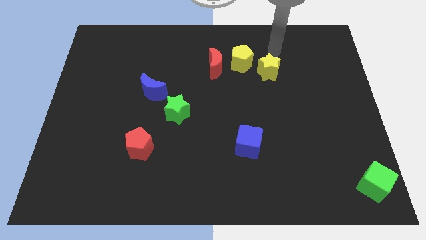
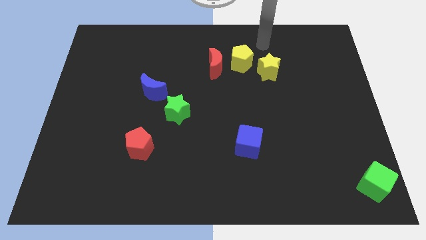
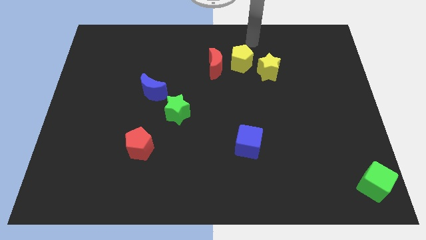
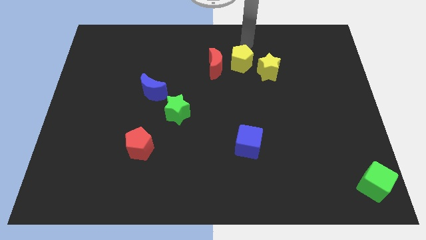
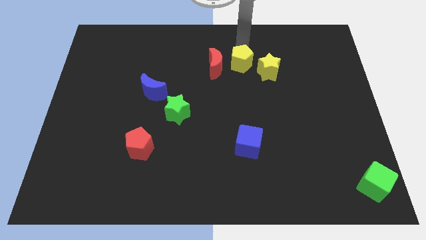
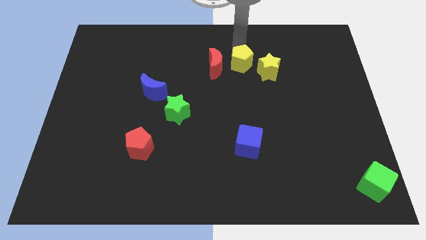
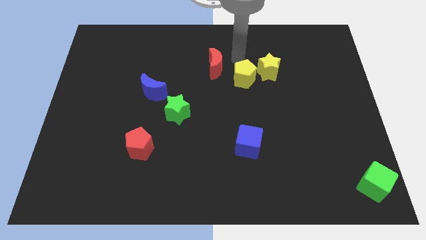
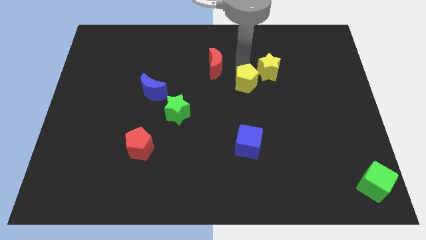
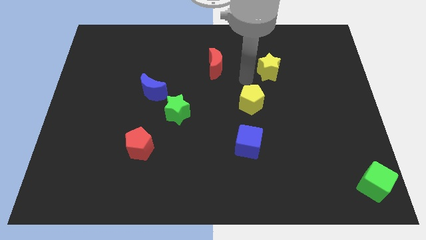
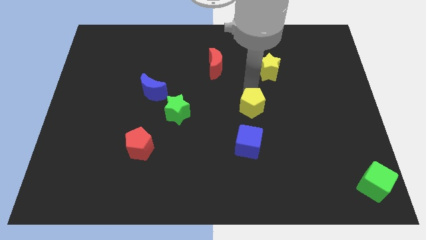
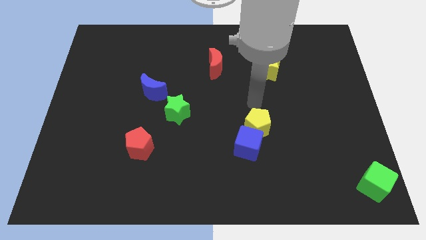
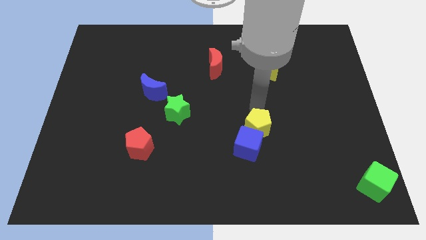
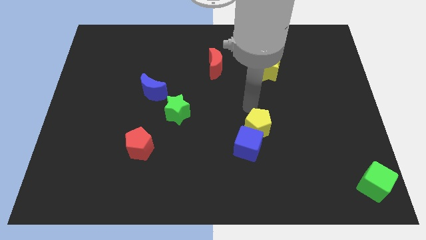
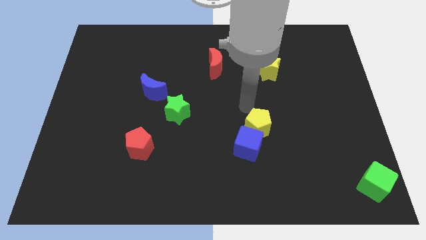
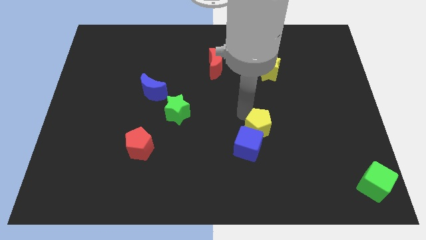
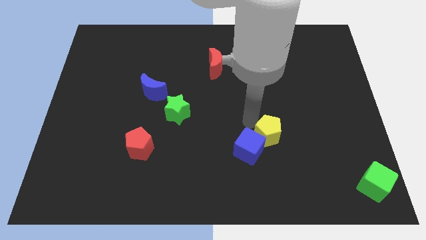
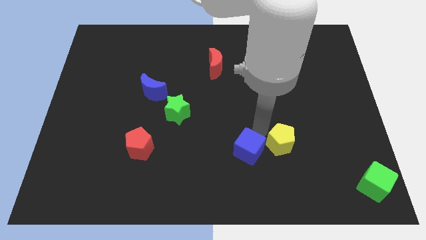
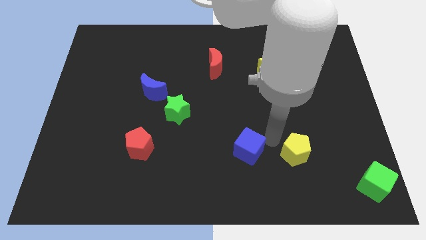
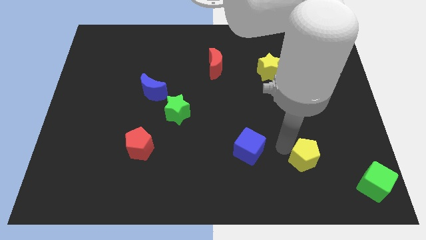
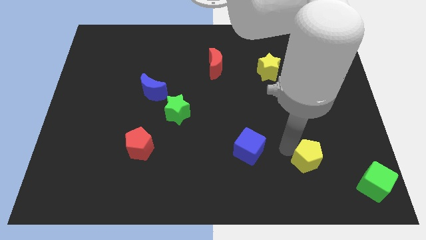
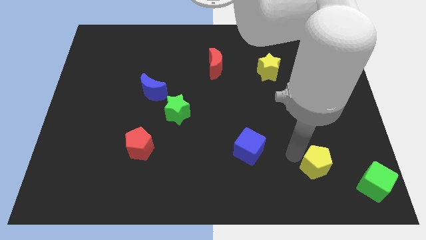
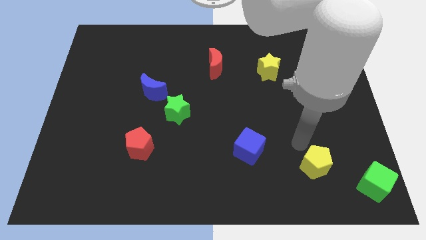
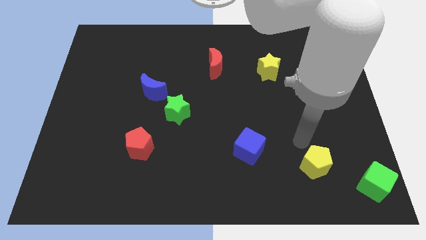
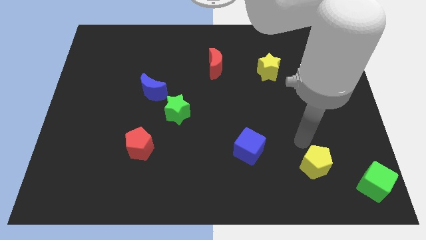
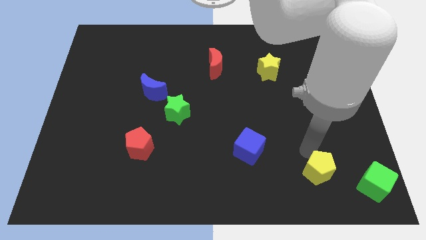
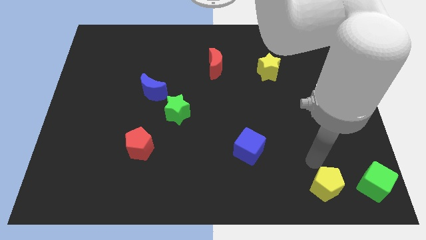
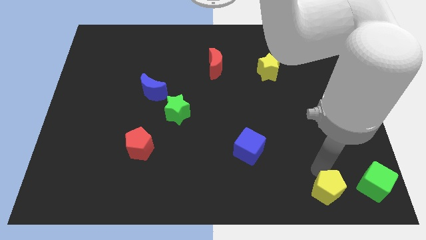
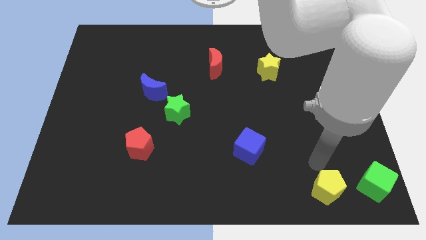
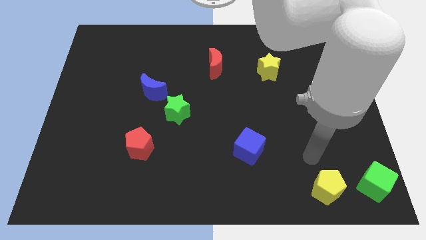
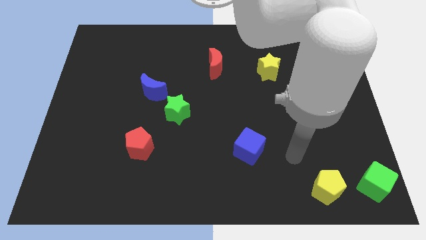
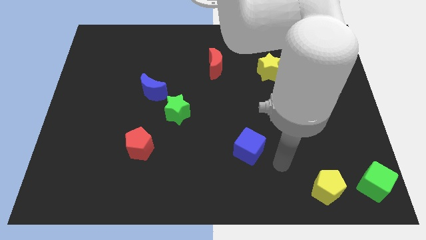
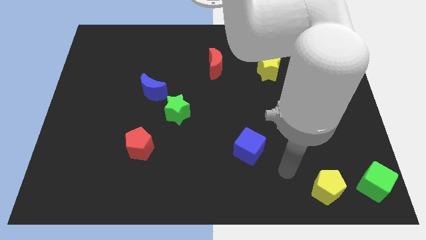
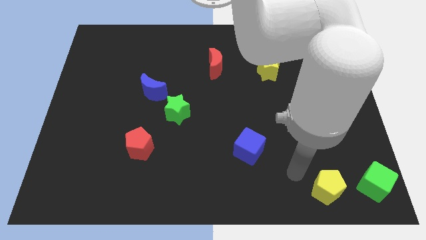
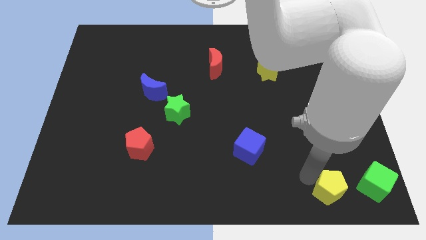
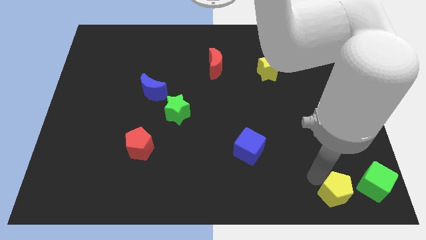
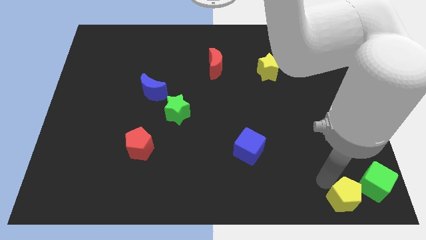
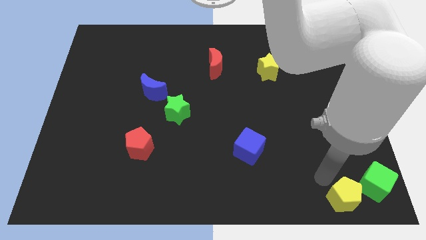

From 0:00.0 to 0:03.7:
place yellow pentagon beside green cube

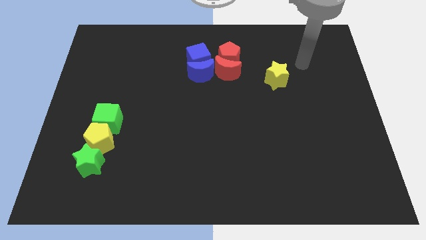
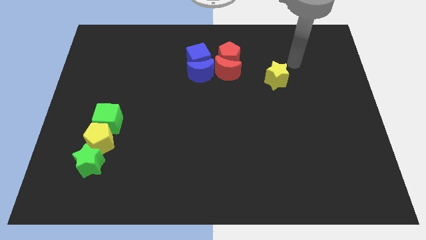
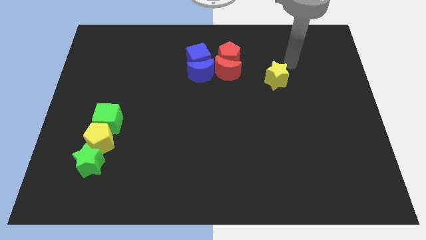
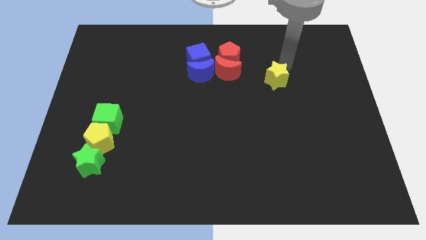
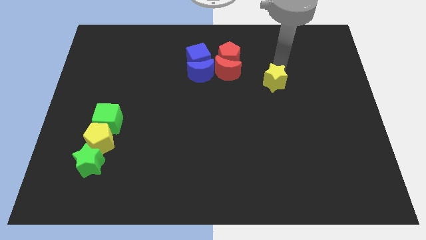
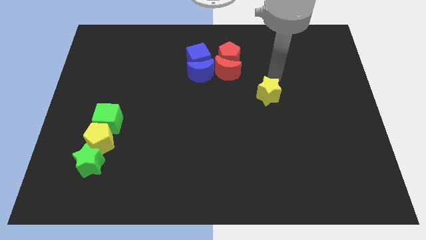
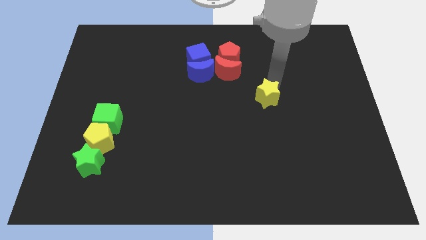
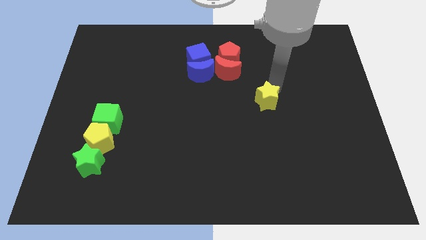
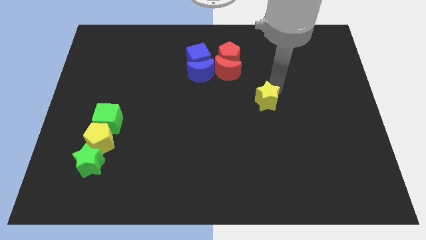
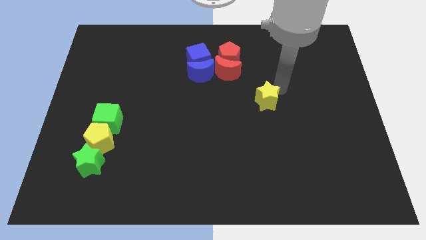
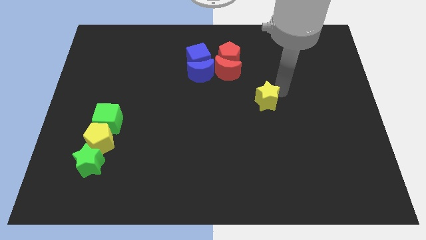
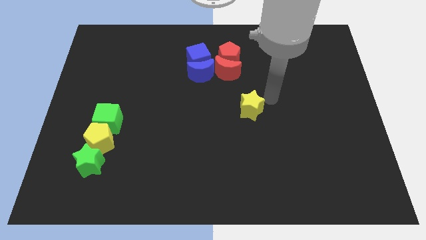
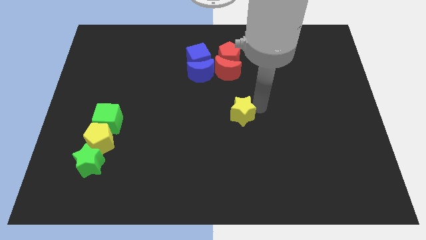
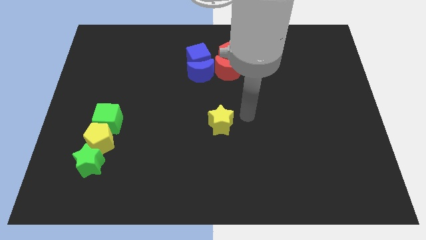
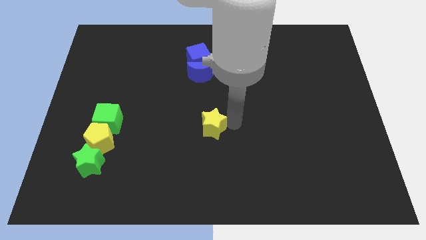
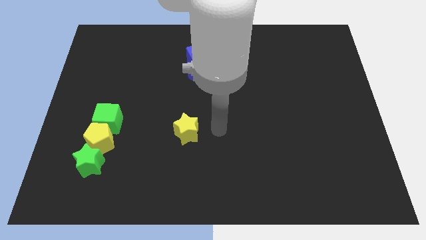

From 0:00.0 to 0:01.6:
push the yellow star towards the bottom side of the board

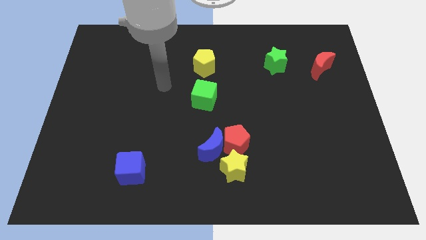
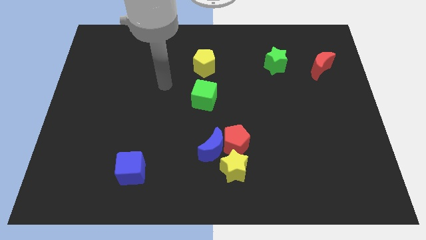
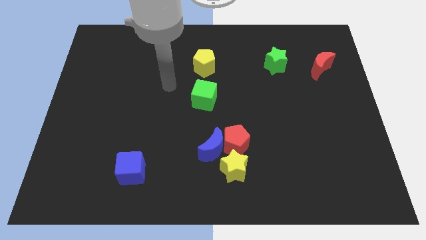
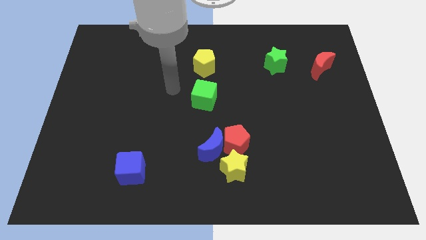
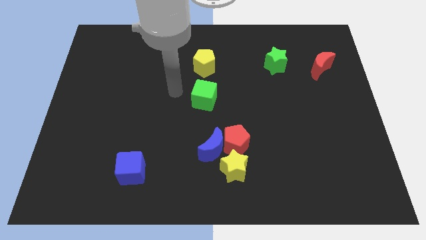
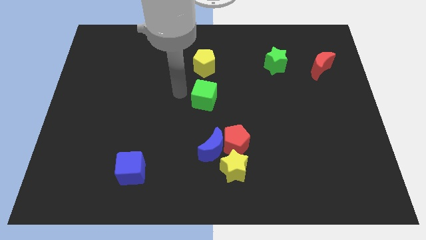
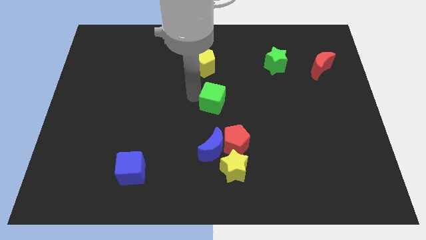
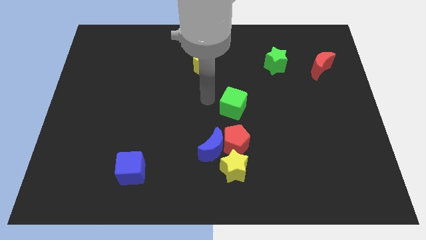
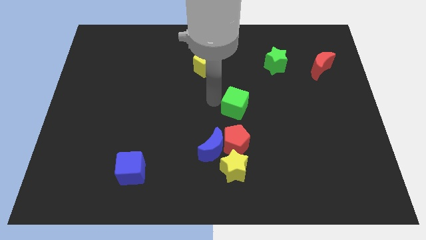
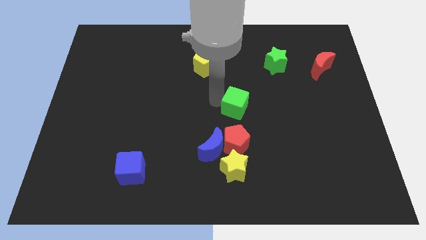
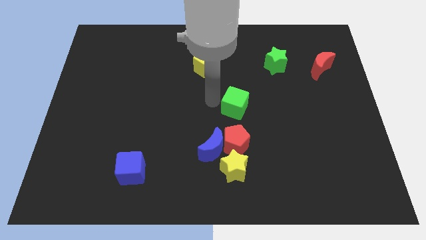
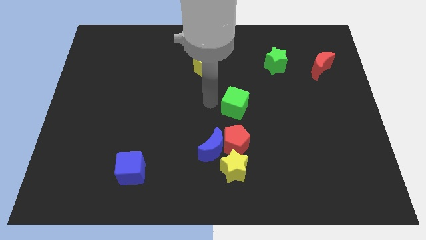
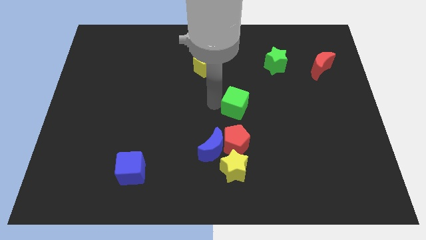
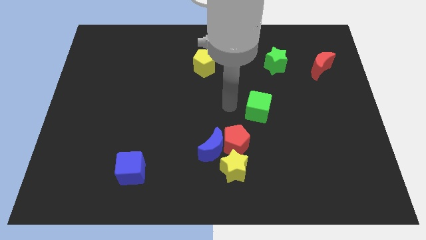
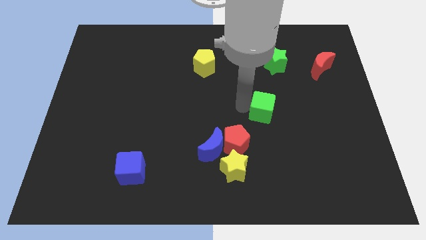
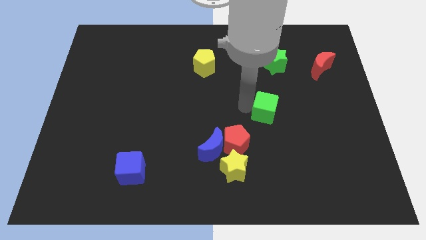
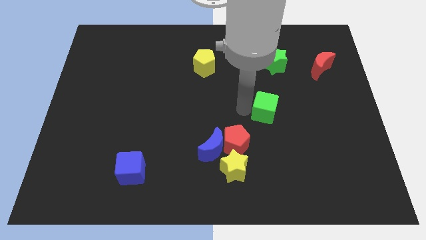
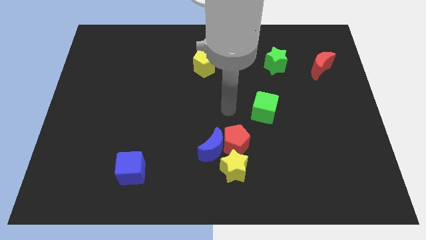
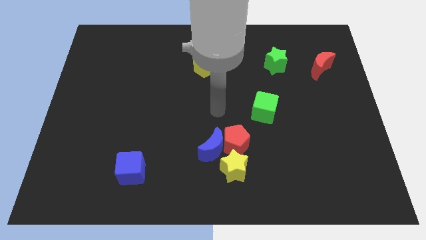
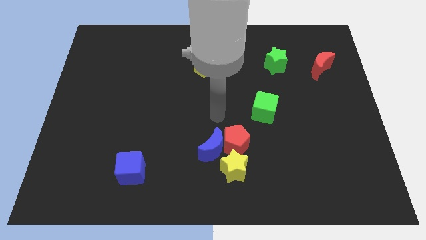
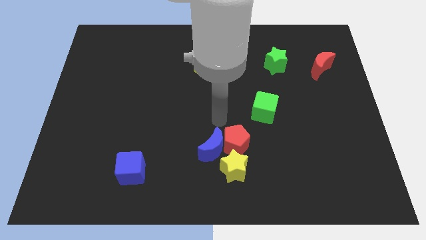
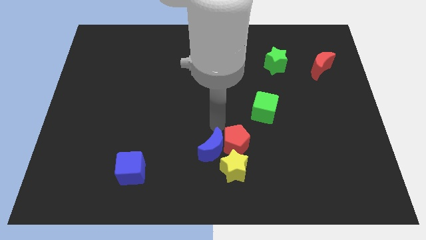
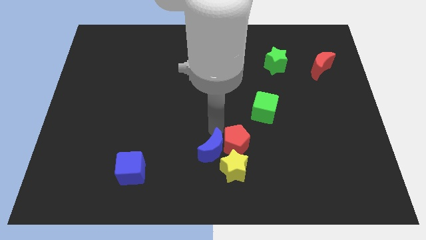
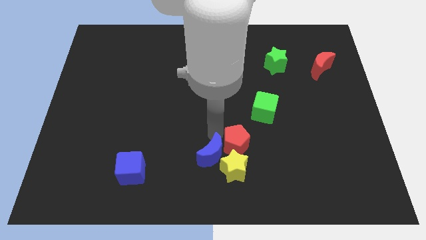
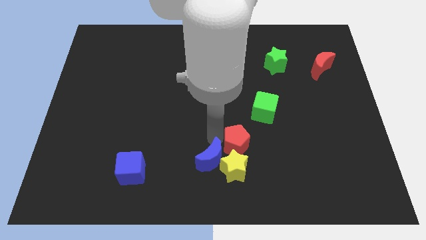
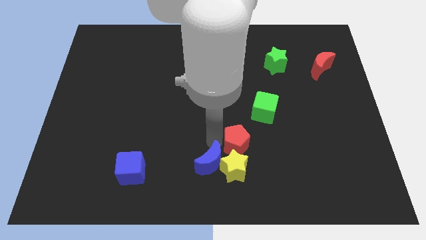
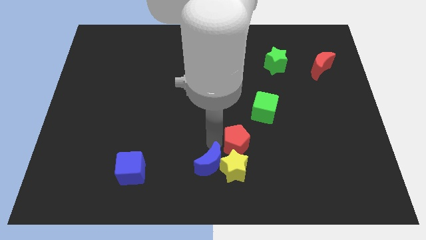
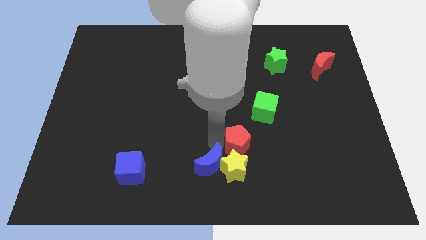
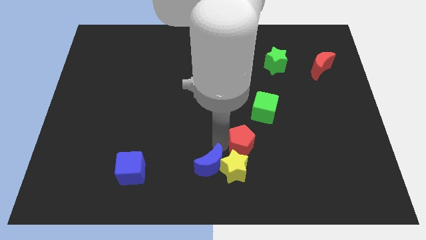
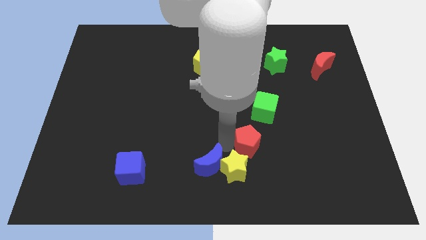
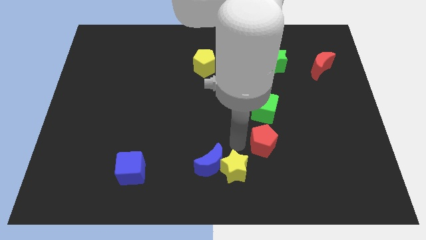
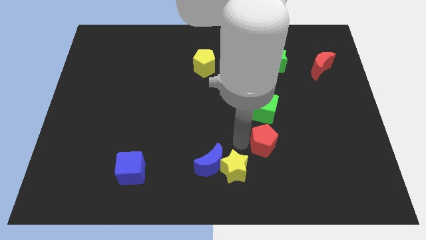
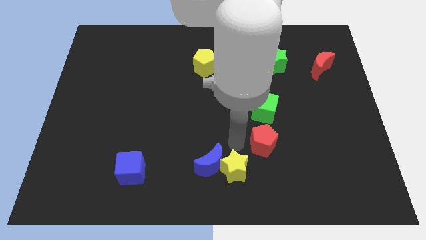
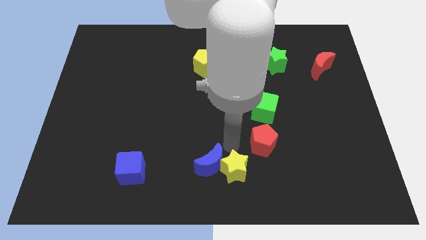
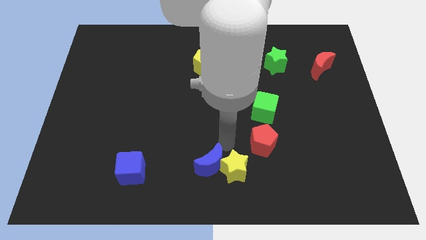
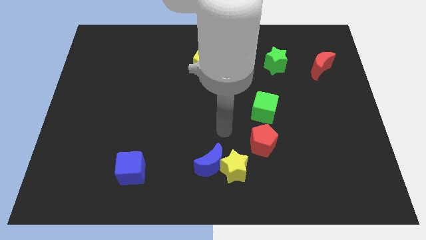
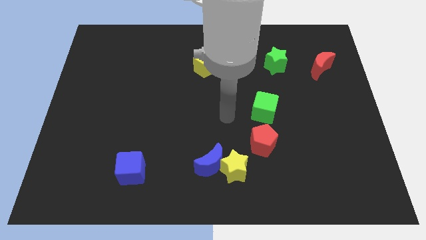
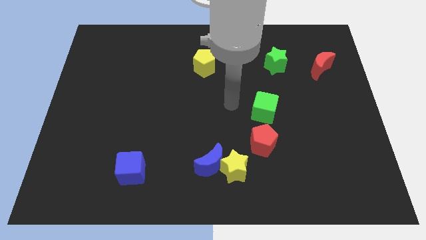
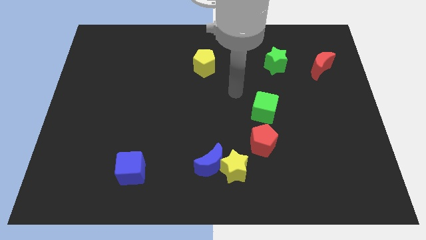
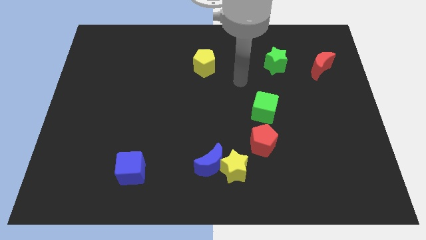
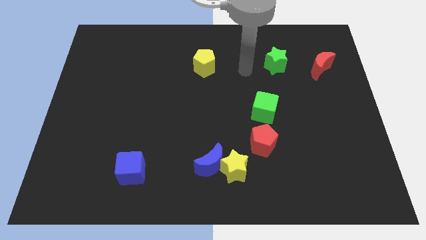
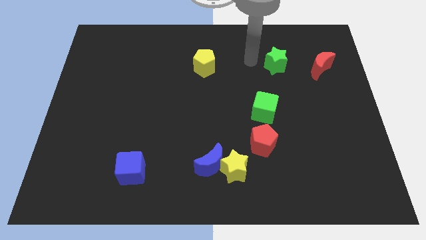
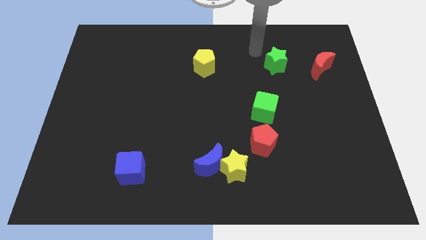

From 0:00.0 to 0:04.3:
place the arm to the left of the green star
